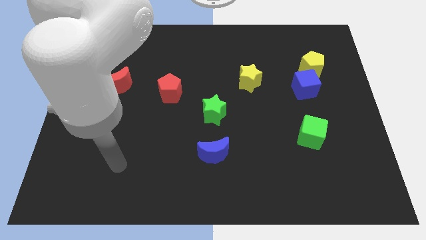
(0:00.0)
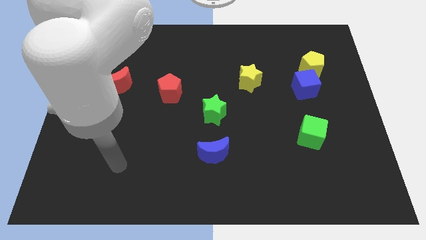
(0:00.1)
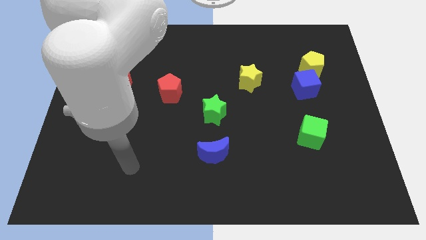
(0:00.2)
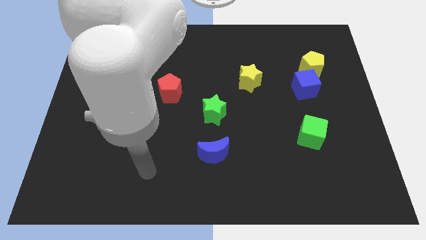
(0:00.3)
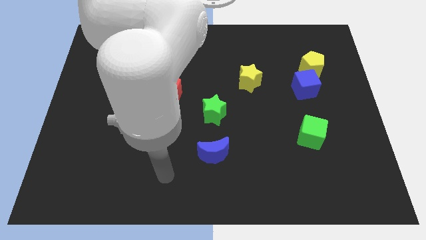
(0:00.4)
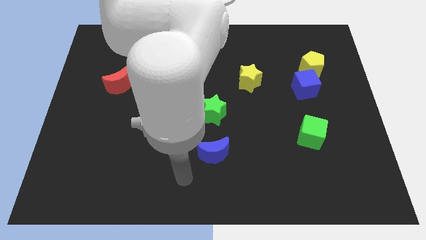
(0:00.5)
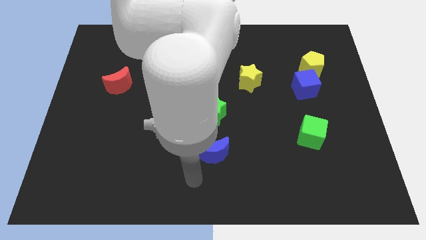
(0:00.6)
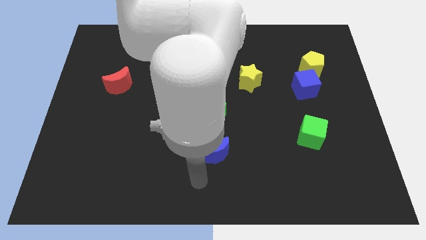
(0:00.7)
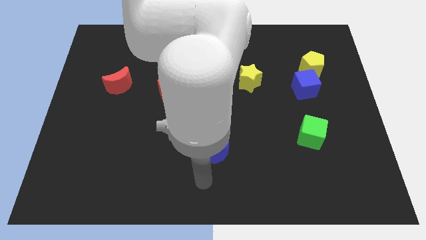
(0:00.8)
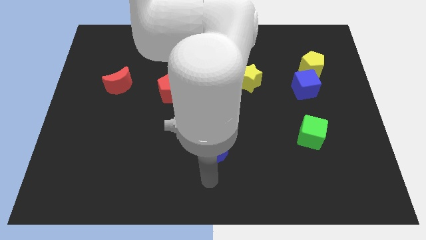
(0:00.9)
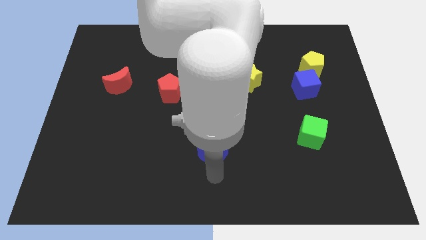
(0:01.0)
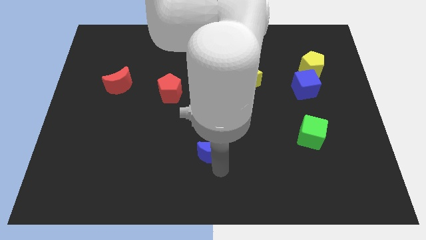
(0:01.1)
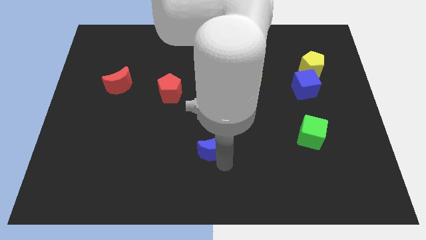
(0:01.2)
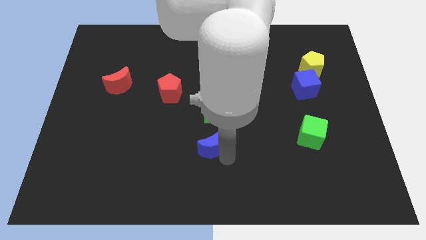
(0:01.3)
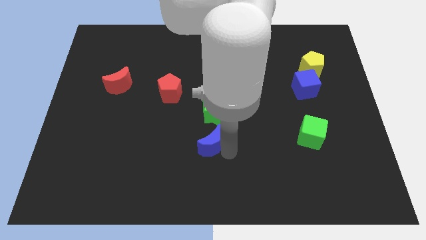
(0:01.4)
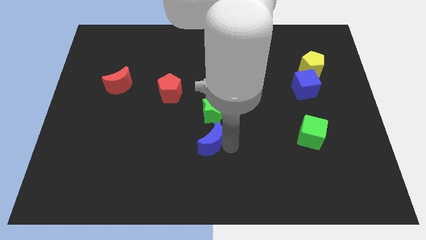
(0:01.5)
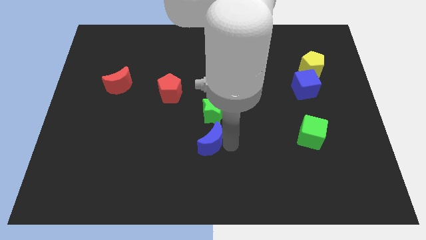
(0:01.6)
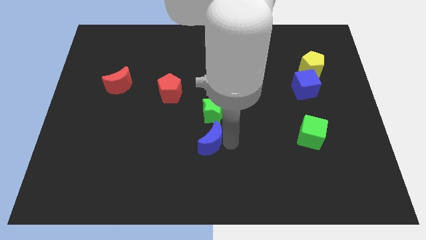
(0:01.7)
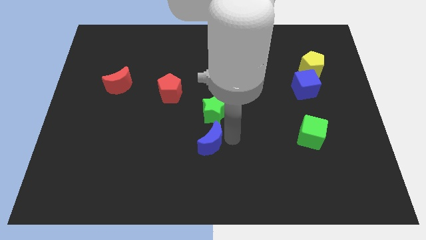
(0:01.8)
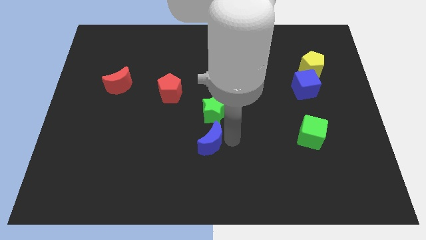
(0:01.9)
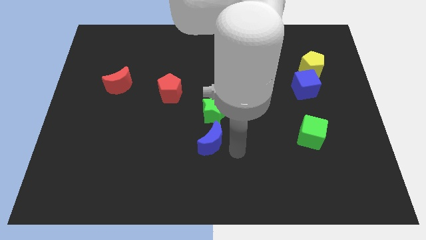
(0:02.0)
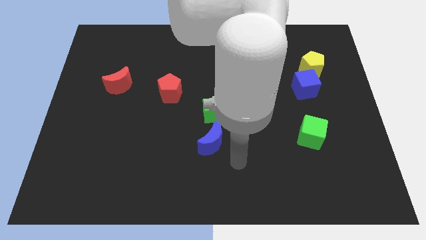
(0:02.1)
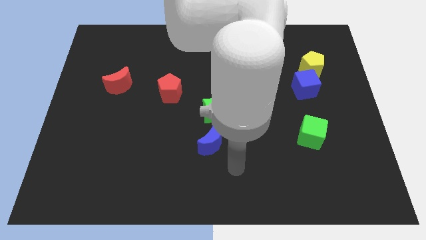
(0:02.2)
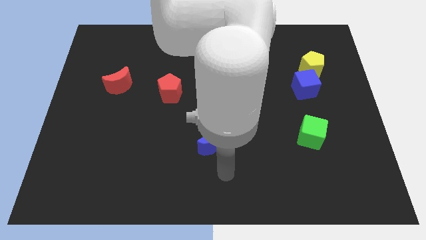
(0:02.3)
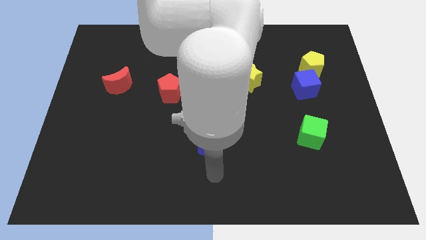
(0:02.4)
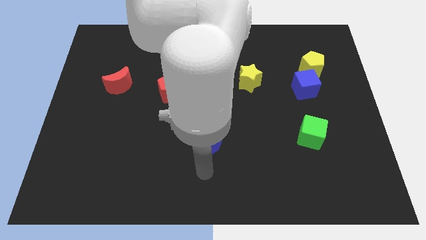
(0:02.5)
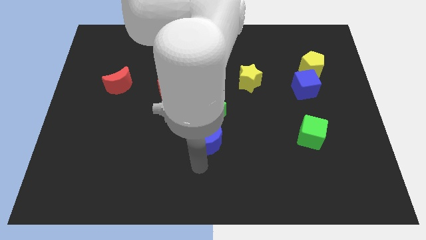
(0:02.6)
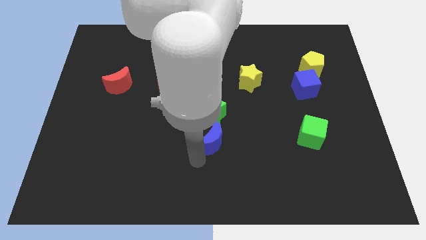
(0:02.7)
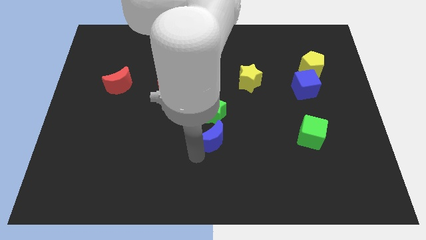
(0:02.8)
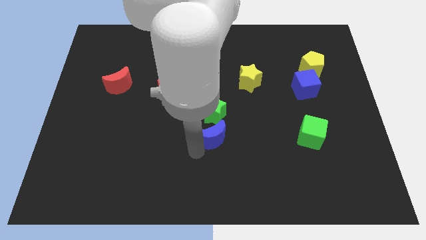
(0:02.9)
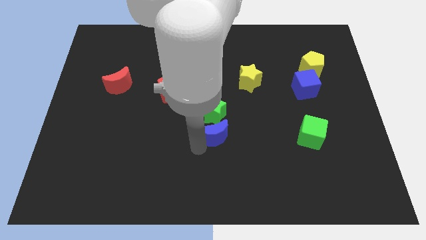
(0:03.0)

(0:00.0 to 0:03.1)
push the blue crescent slightly to the top

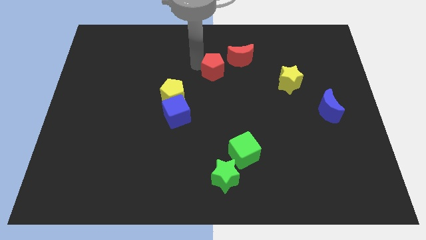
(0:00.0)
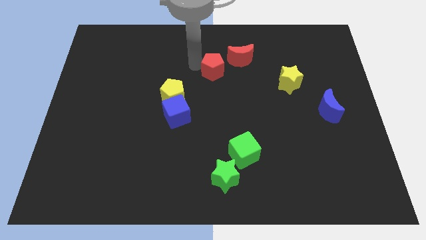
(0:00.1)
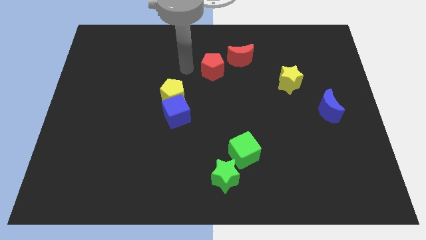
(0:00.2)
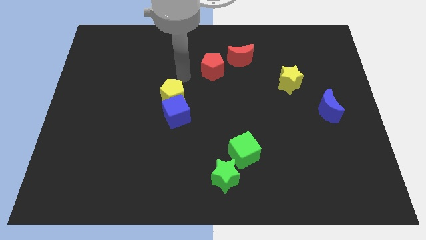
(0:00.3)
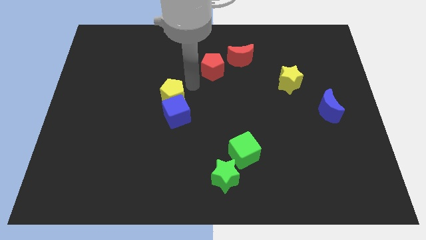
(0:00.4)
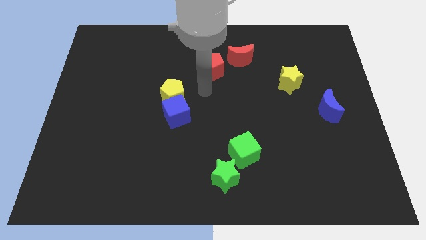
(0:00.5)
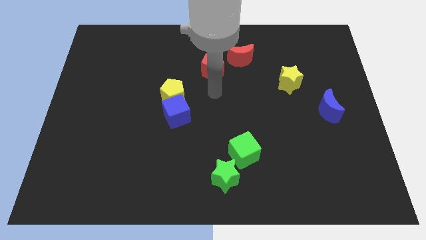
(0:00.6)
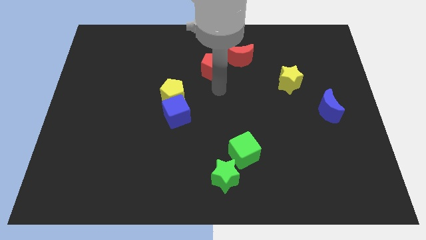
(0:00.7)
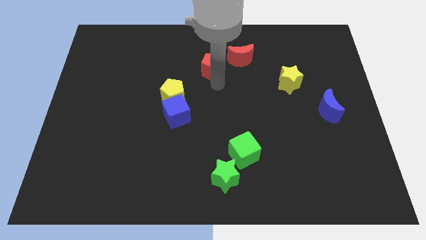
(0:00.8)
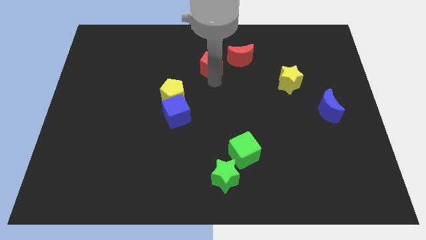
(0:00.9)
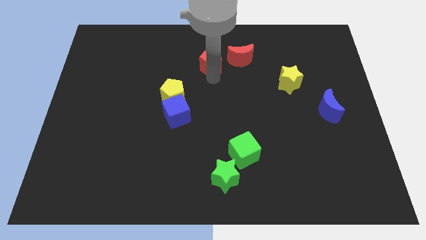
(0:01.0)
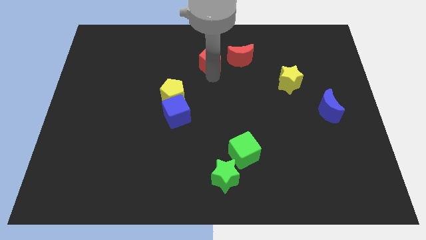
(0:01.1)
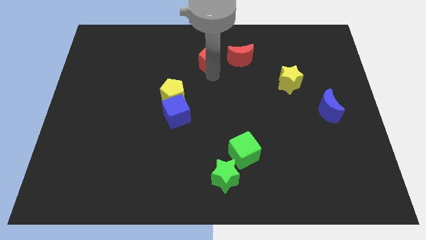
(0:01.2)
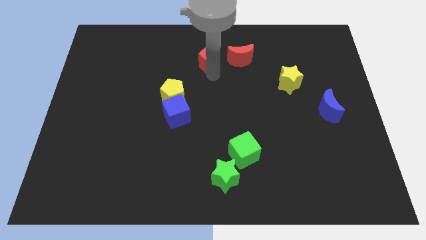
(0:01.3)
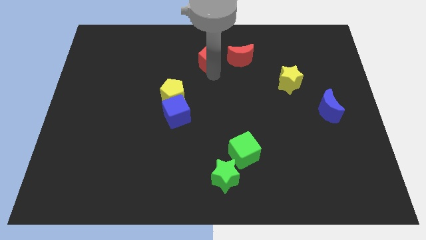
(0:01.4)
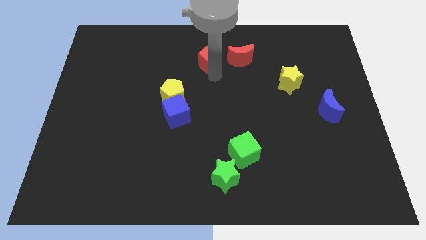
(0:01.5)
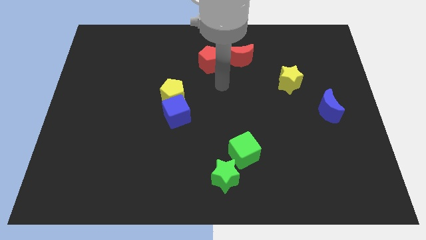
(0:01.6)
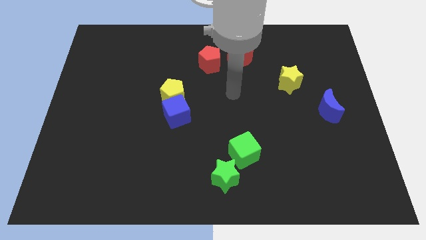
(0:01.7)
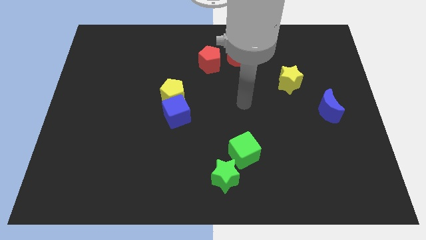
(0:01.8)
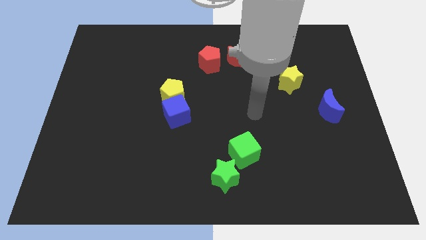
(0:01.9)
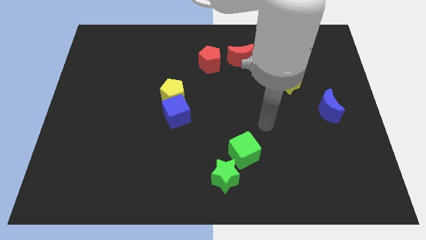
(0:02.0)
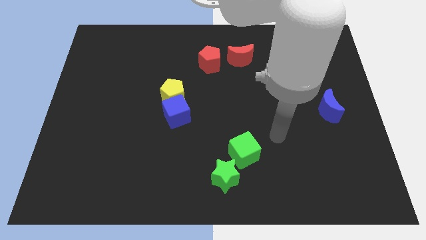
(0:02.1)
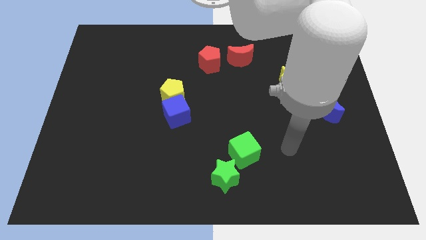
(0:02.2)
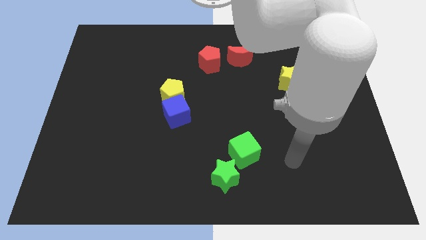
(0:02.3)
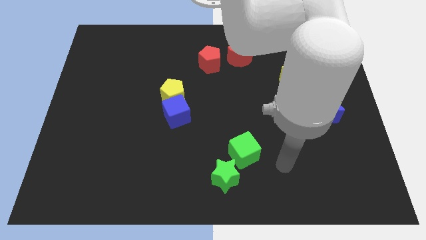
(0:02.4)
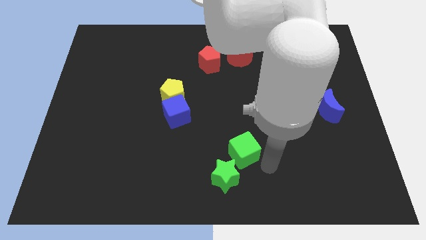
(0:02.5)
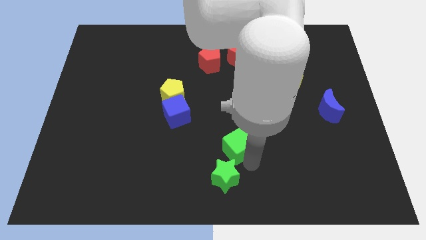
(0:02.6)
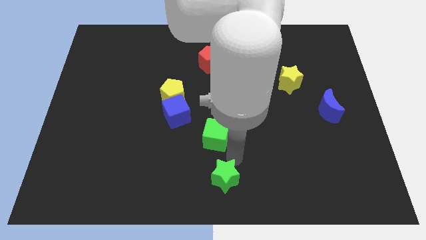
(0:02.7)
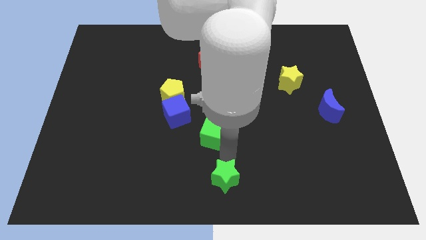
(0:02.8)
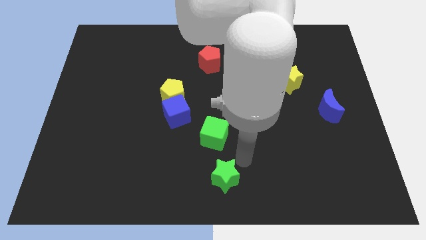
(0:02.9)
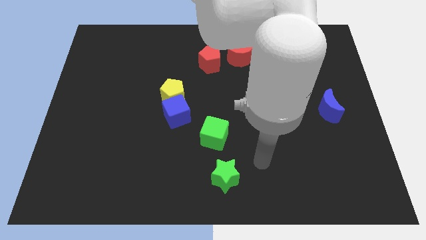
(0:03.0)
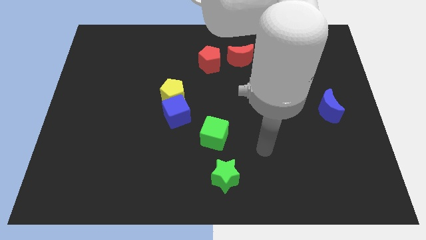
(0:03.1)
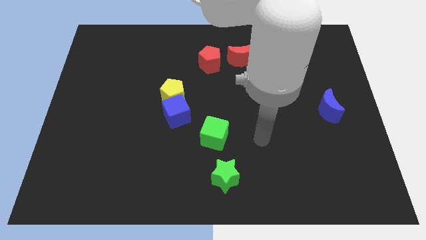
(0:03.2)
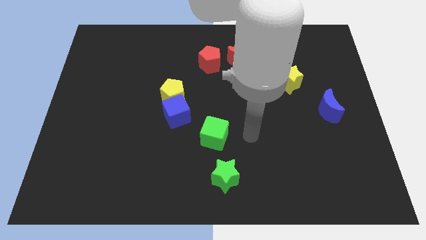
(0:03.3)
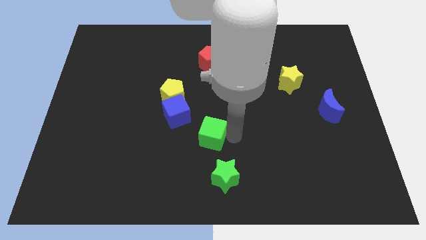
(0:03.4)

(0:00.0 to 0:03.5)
push the green cube below the red pentagon

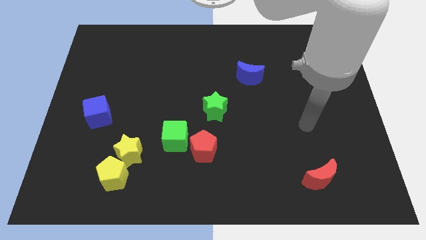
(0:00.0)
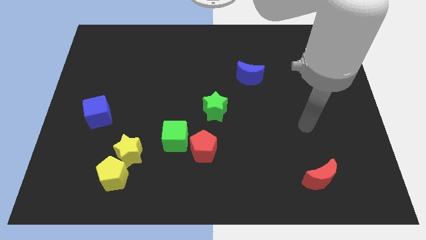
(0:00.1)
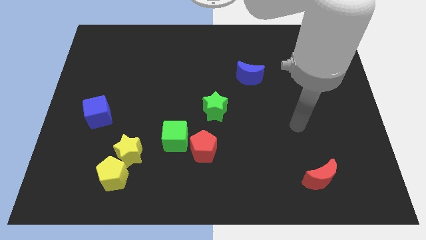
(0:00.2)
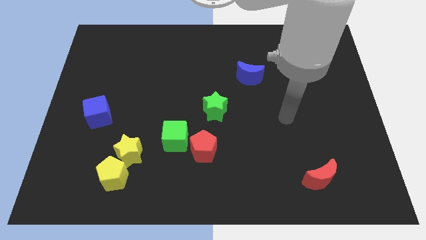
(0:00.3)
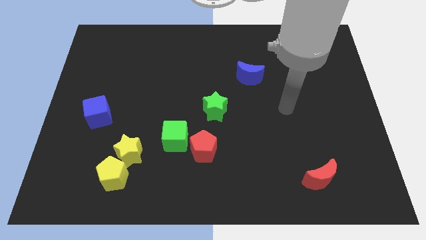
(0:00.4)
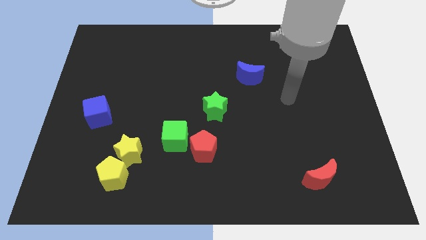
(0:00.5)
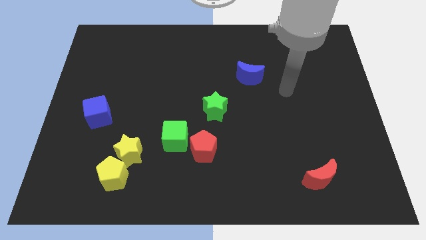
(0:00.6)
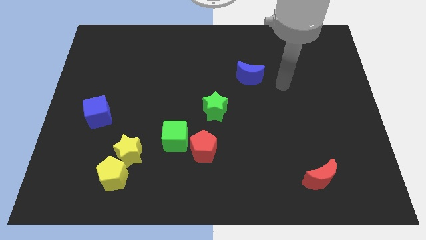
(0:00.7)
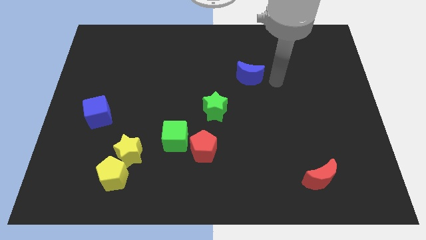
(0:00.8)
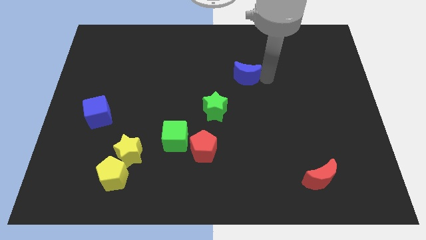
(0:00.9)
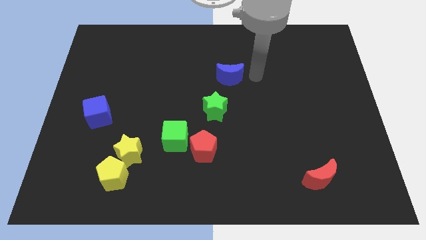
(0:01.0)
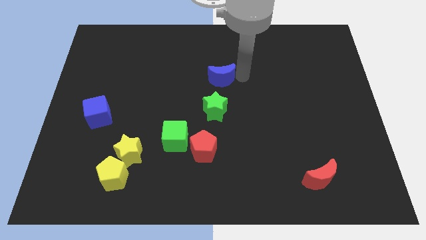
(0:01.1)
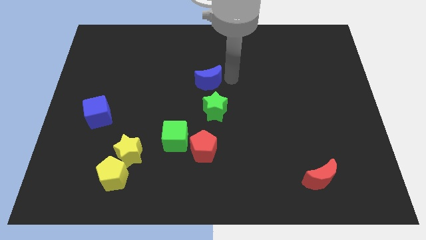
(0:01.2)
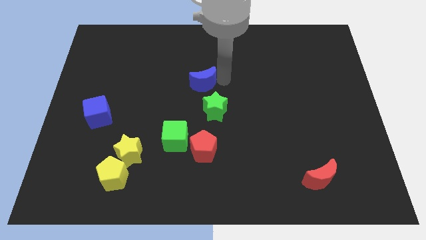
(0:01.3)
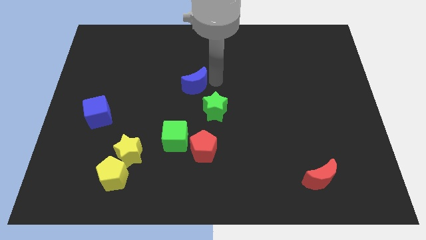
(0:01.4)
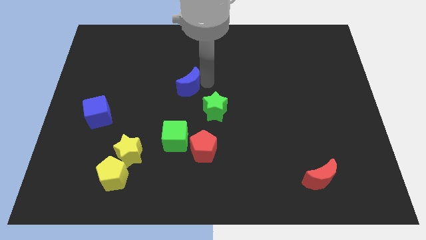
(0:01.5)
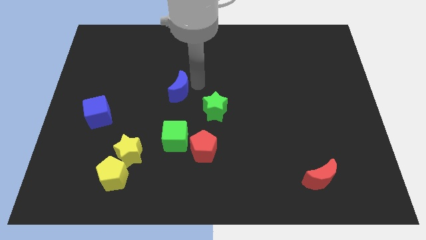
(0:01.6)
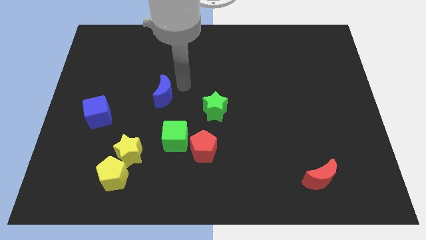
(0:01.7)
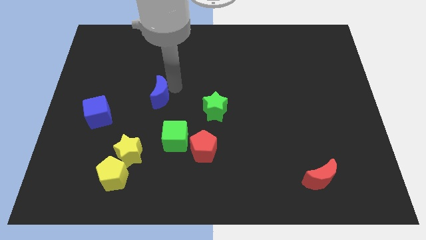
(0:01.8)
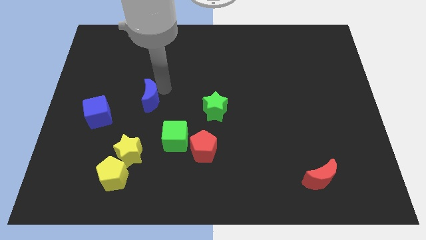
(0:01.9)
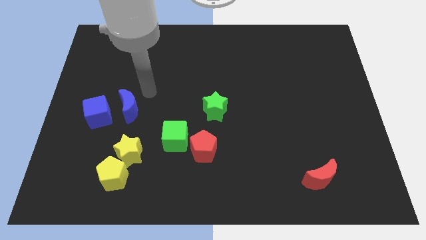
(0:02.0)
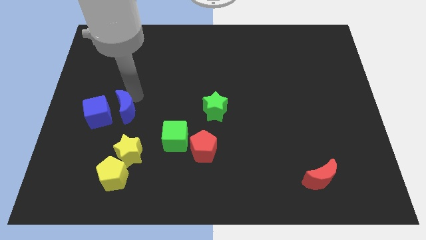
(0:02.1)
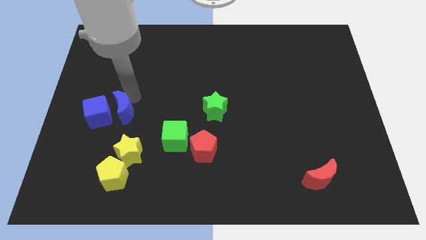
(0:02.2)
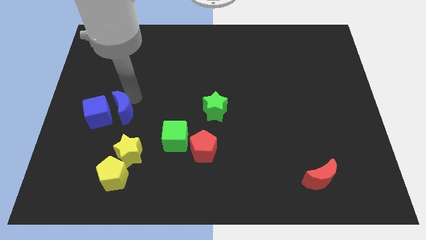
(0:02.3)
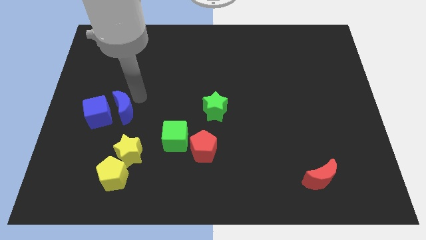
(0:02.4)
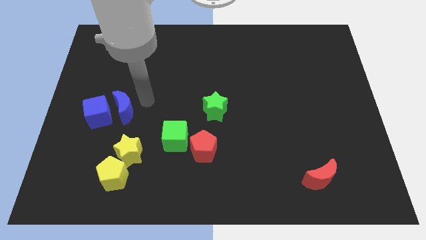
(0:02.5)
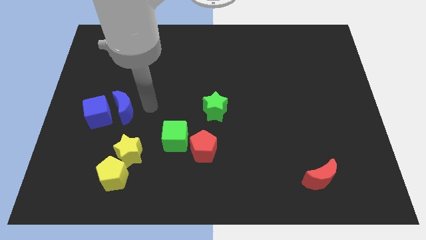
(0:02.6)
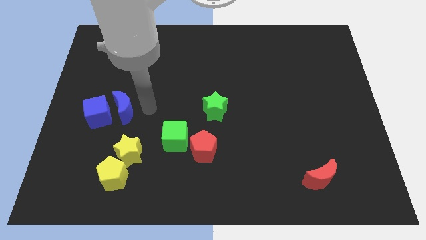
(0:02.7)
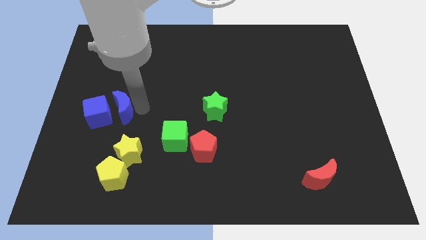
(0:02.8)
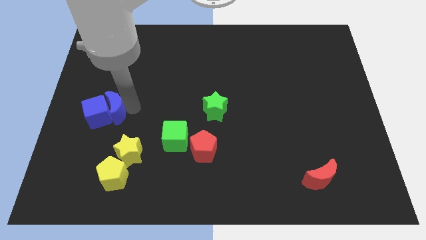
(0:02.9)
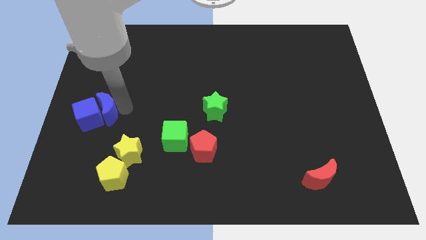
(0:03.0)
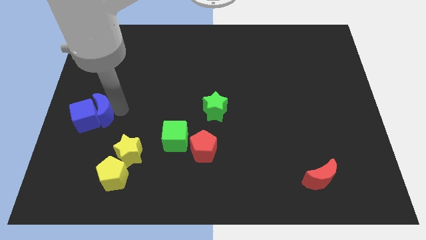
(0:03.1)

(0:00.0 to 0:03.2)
move the blue crescent into the blue cube
